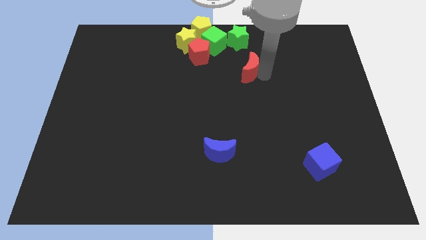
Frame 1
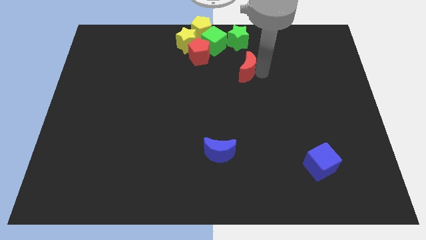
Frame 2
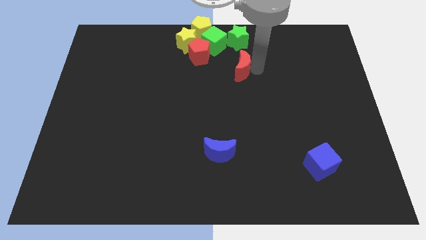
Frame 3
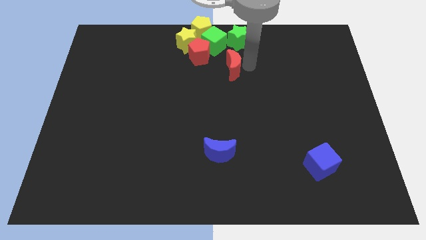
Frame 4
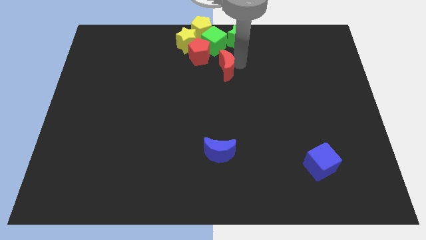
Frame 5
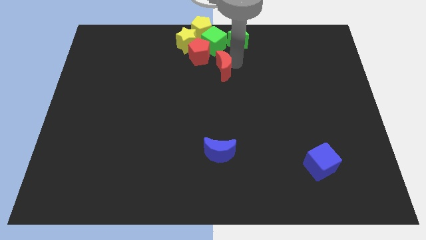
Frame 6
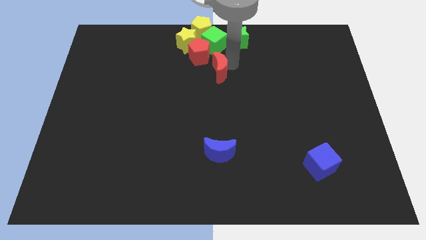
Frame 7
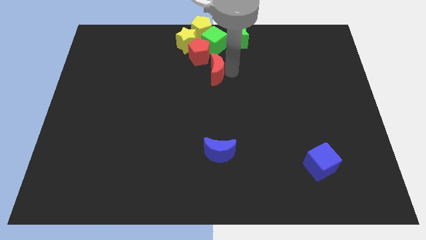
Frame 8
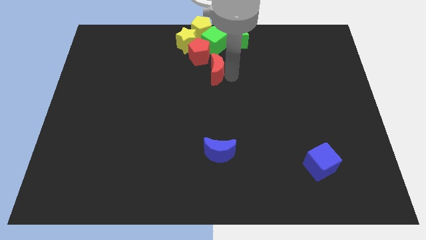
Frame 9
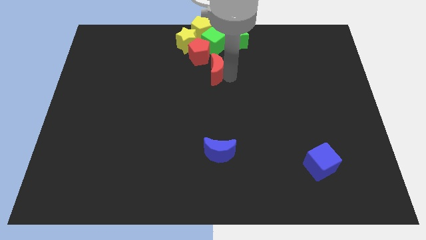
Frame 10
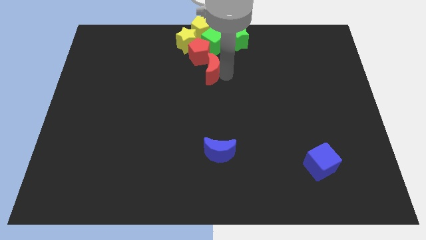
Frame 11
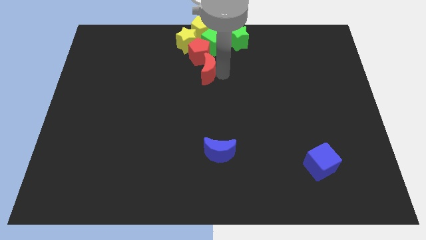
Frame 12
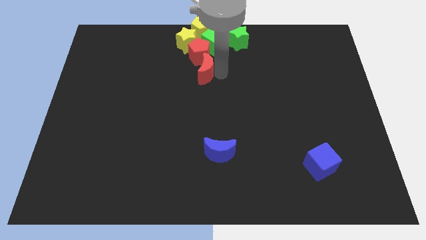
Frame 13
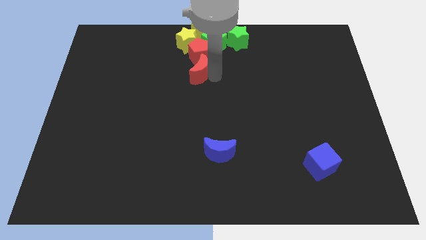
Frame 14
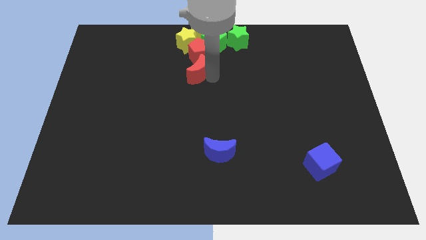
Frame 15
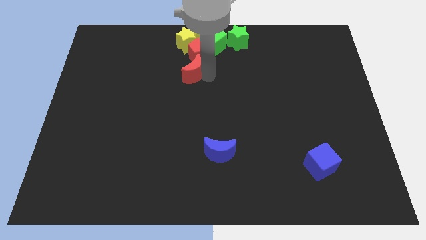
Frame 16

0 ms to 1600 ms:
put the red moon underneath the red pentagon

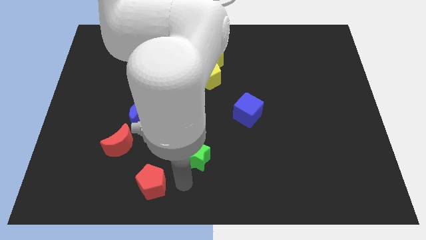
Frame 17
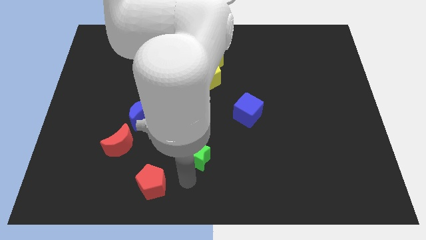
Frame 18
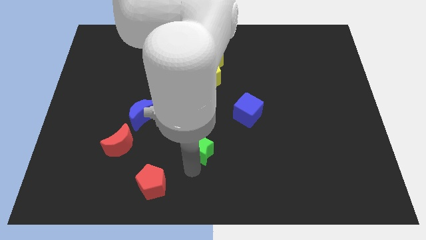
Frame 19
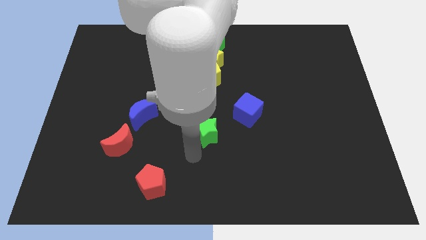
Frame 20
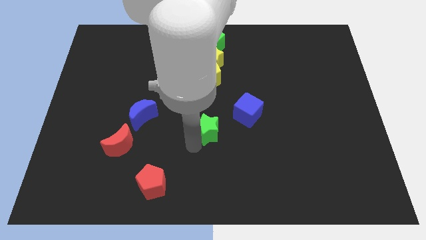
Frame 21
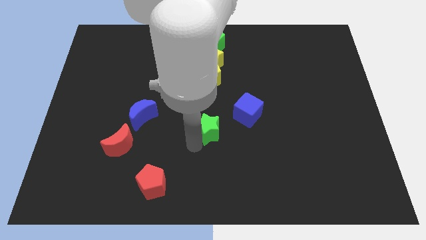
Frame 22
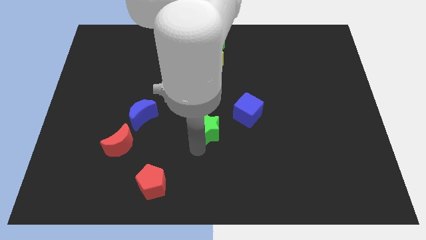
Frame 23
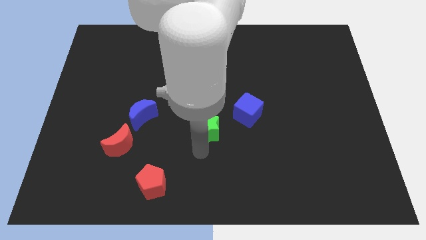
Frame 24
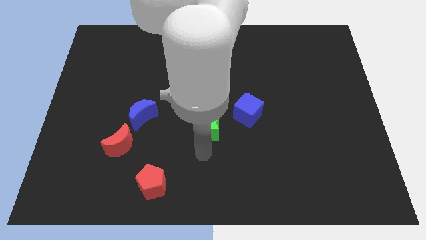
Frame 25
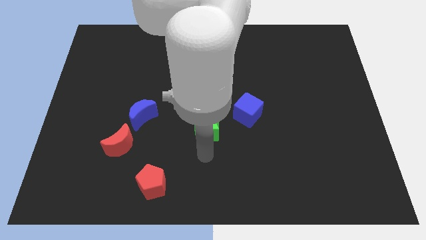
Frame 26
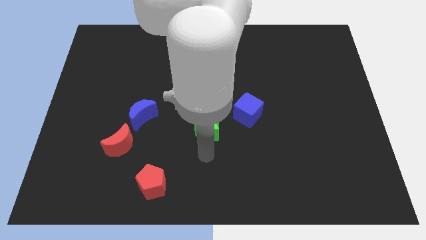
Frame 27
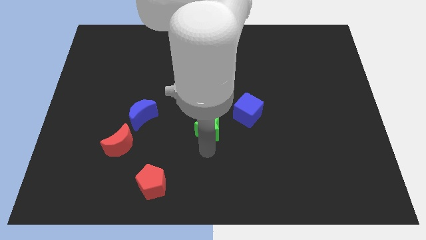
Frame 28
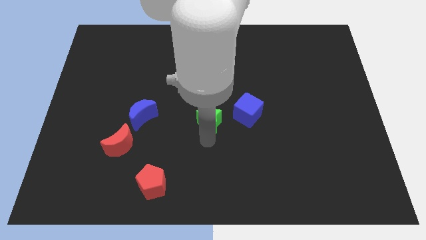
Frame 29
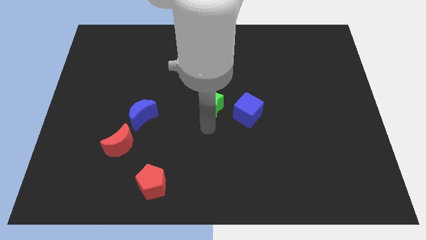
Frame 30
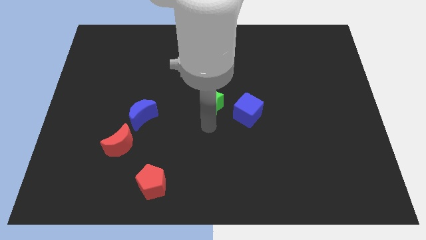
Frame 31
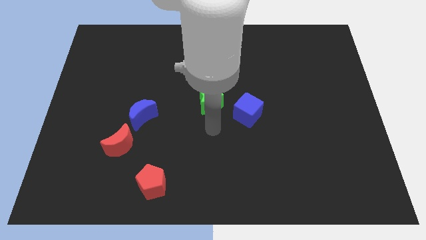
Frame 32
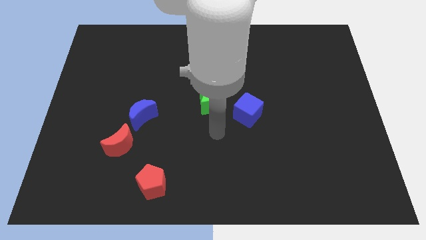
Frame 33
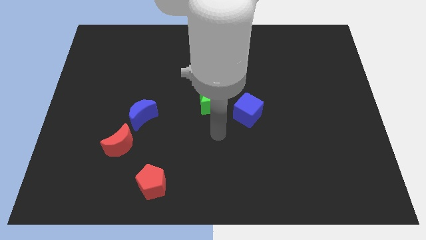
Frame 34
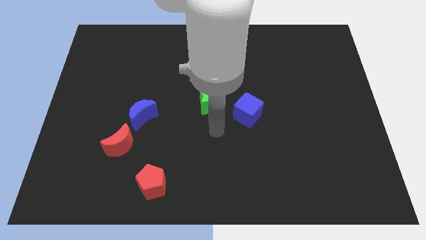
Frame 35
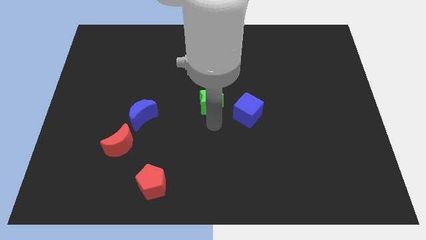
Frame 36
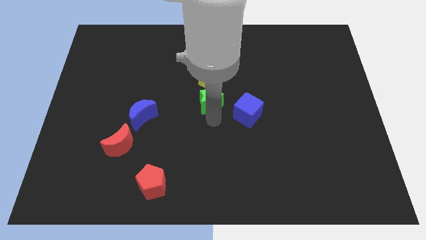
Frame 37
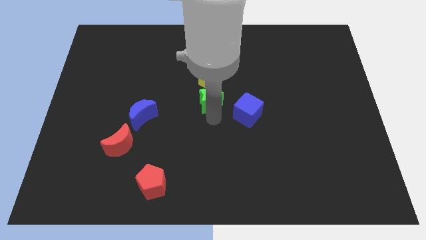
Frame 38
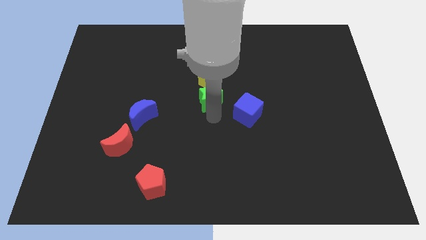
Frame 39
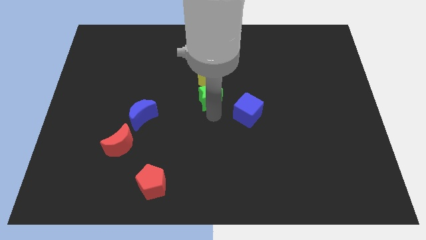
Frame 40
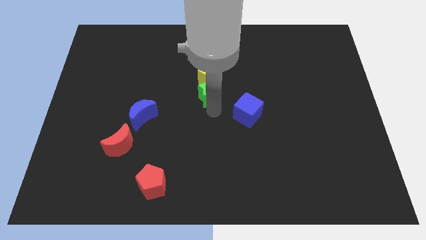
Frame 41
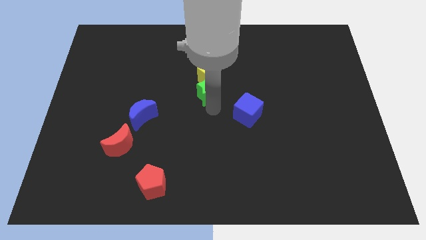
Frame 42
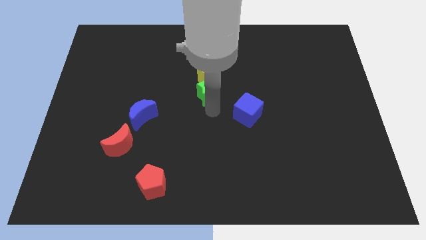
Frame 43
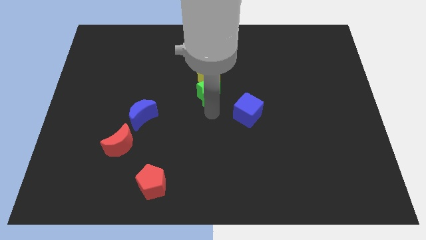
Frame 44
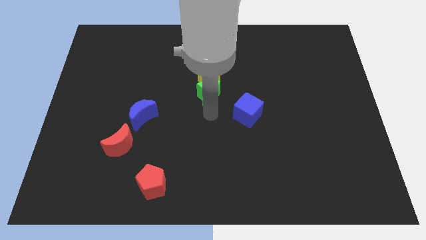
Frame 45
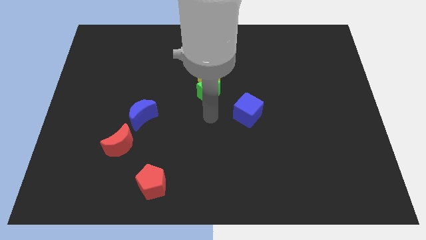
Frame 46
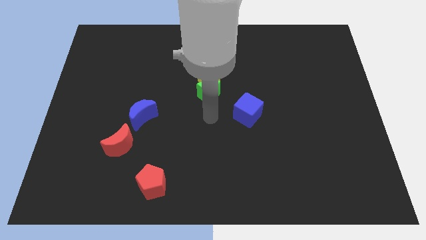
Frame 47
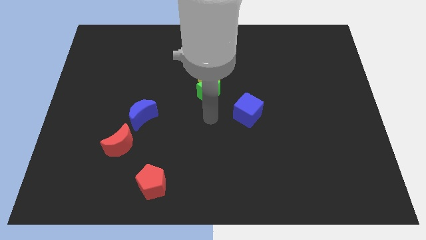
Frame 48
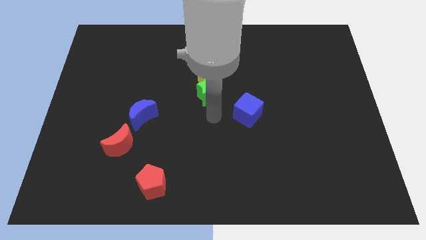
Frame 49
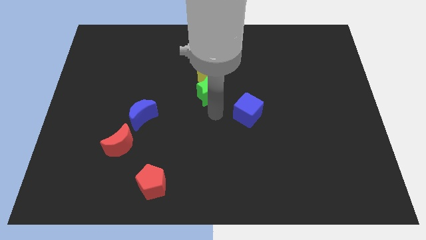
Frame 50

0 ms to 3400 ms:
move green star to the middle of the board

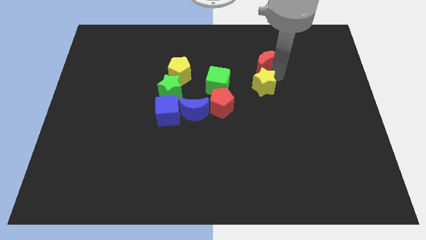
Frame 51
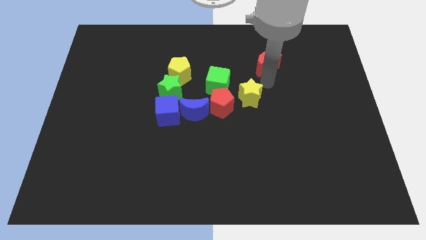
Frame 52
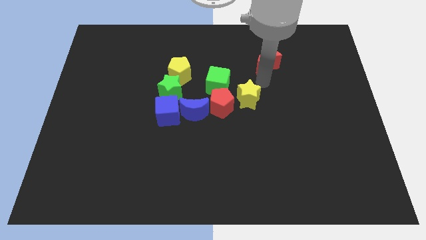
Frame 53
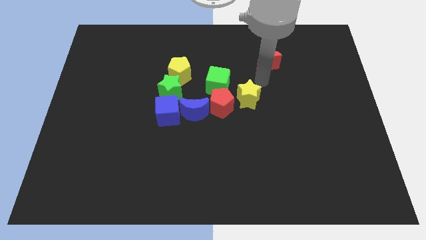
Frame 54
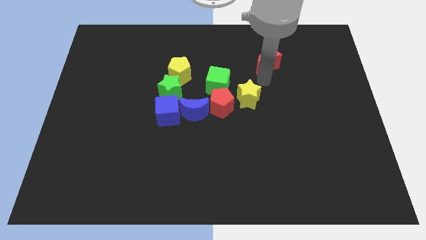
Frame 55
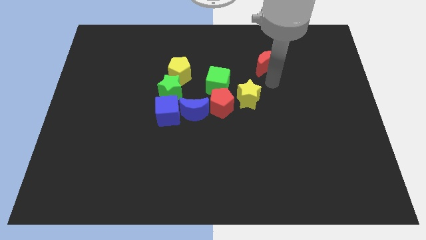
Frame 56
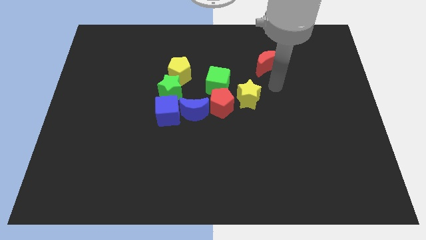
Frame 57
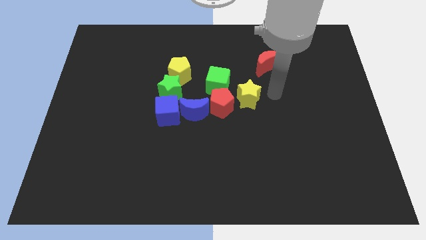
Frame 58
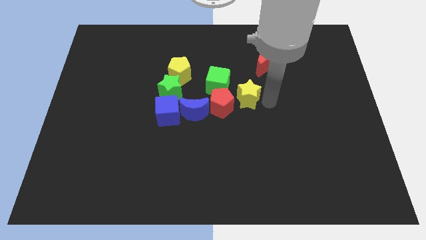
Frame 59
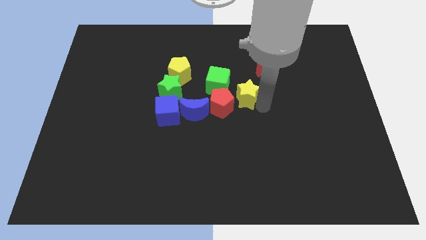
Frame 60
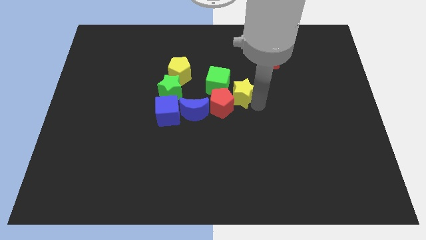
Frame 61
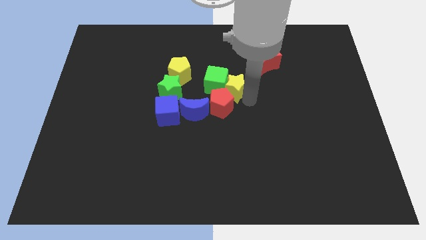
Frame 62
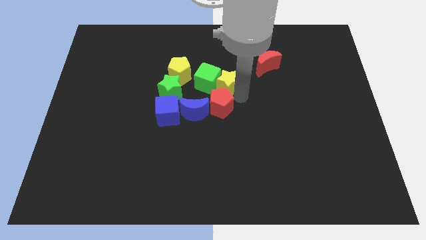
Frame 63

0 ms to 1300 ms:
push the yellow star into green square

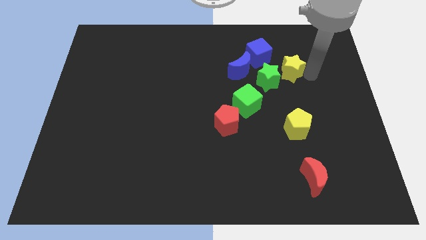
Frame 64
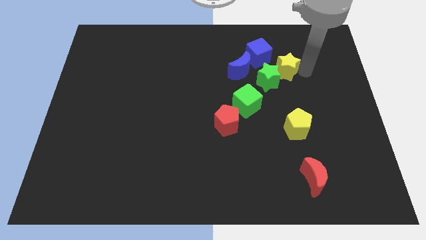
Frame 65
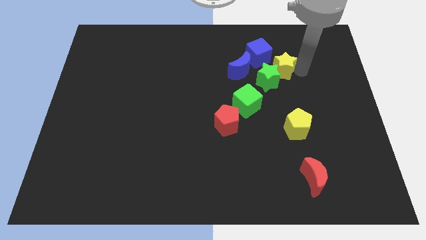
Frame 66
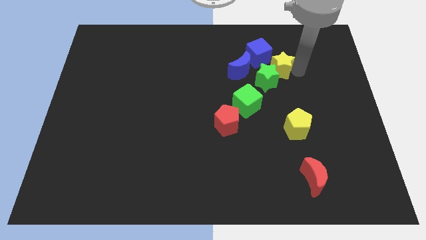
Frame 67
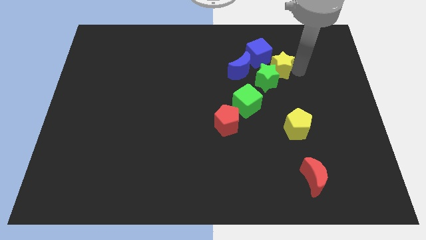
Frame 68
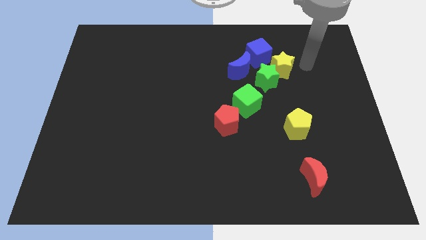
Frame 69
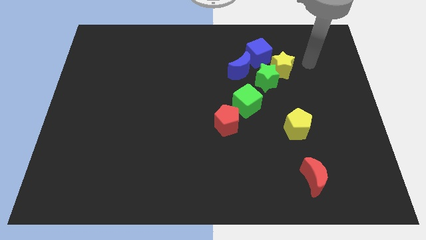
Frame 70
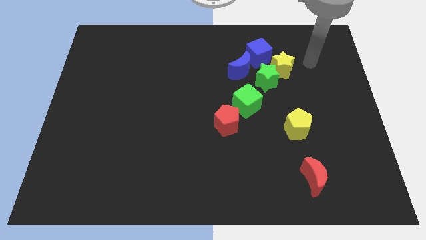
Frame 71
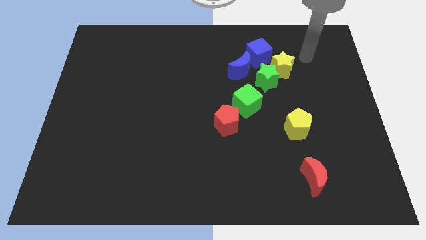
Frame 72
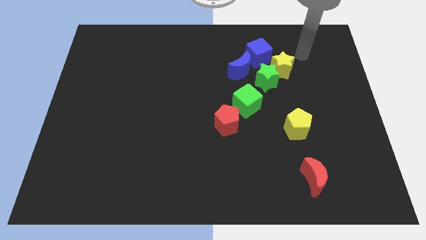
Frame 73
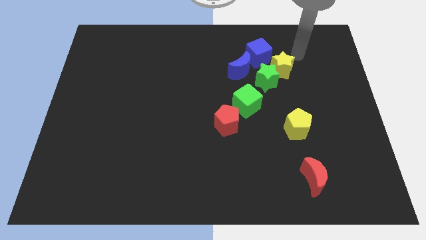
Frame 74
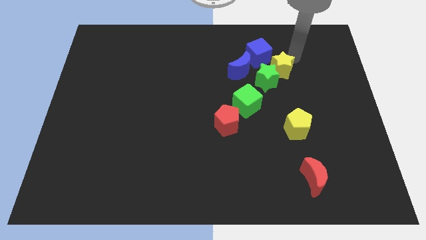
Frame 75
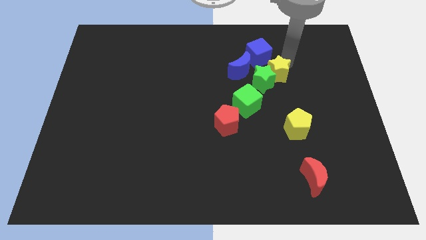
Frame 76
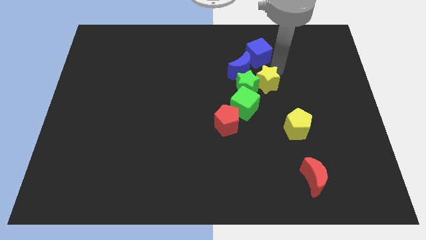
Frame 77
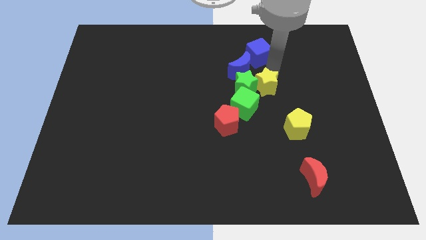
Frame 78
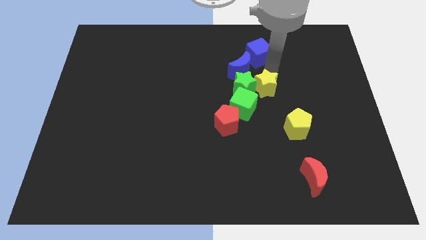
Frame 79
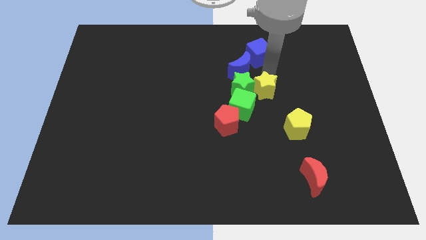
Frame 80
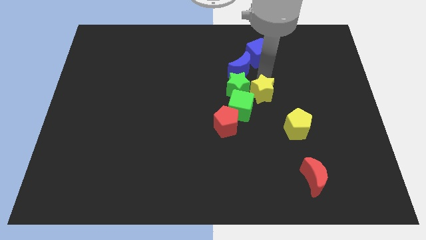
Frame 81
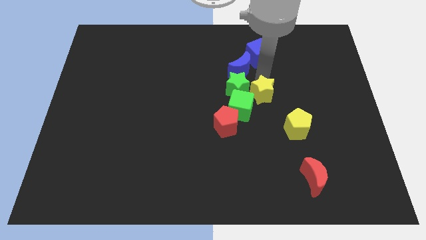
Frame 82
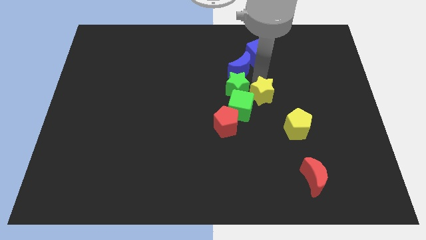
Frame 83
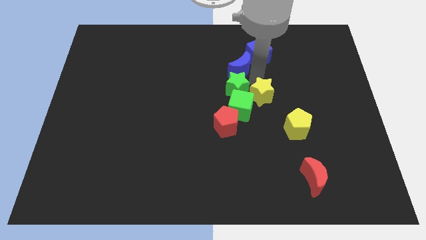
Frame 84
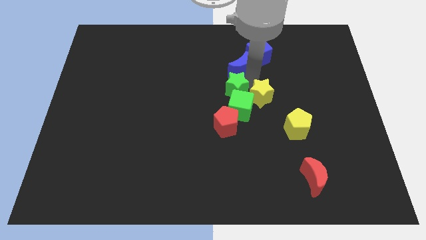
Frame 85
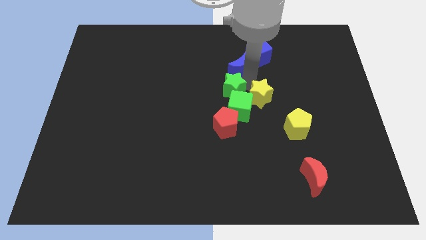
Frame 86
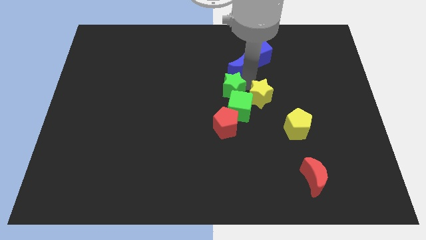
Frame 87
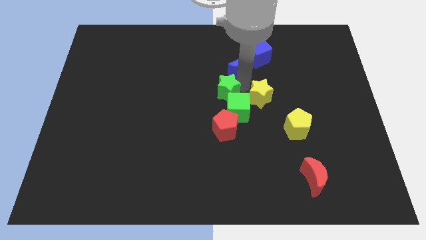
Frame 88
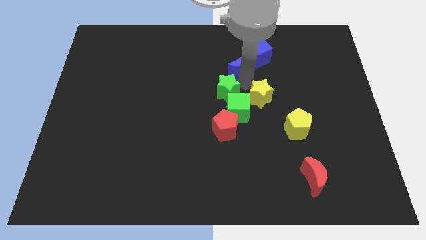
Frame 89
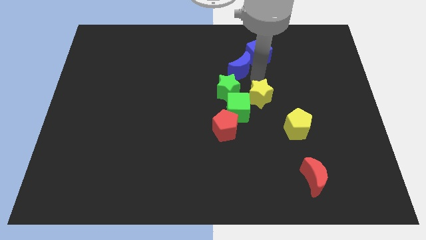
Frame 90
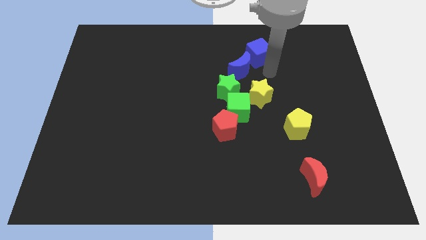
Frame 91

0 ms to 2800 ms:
push the yellow and green stars into green cube
